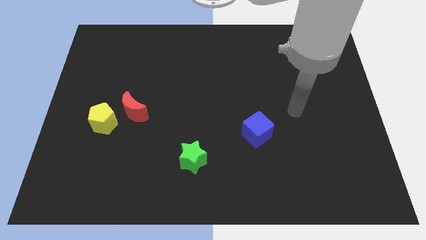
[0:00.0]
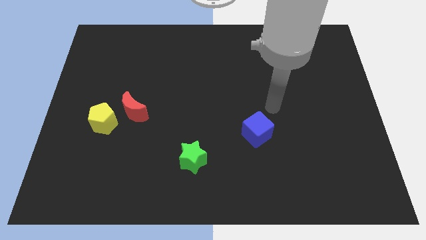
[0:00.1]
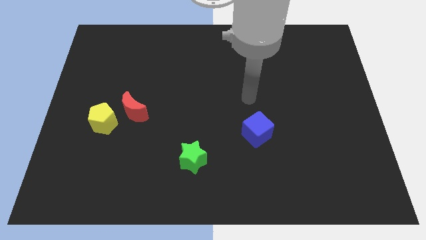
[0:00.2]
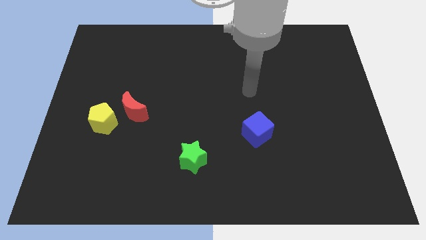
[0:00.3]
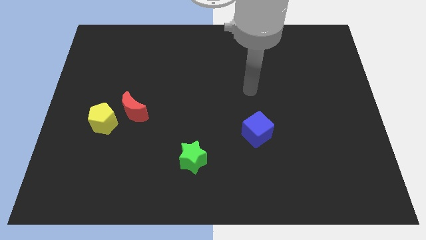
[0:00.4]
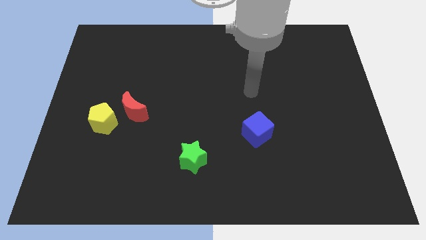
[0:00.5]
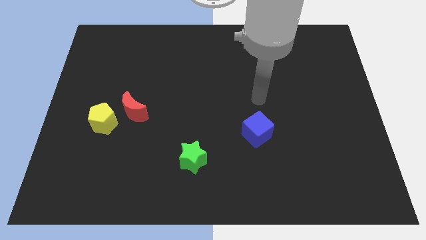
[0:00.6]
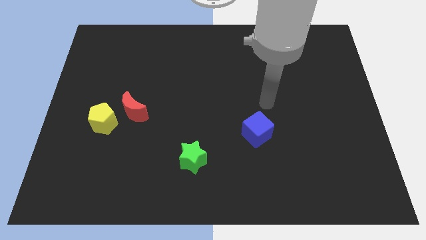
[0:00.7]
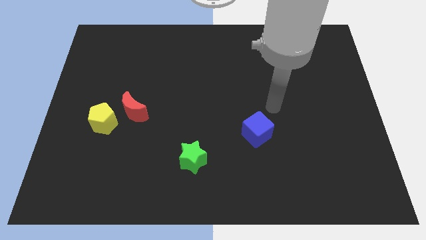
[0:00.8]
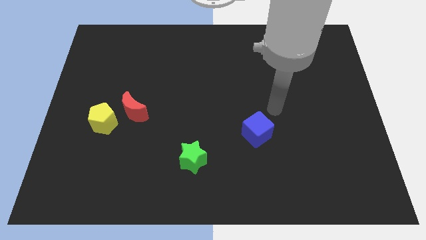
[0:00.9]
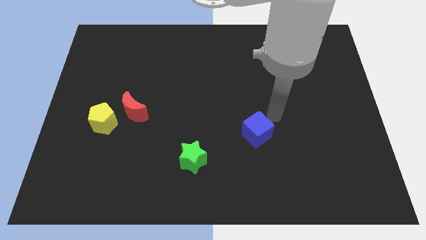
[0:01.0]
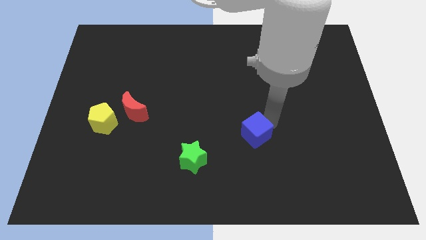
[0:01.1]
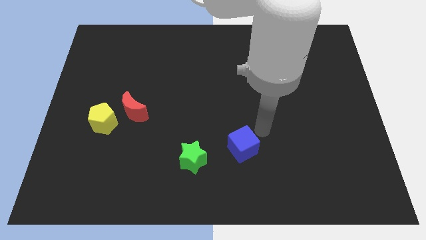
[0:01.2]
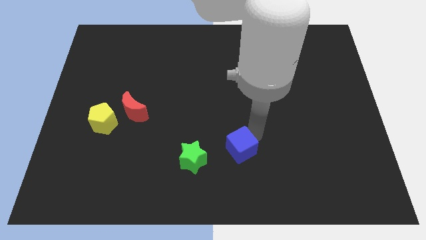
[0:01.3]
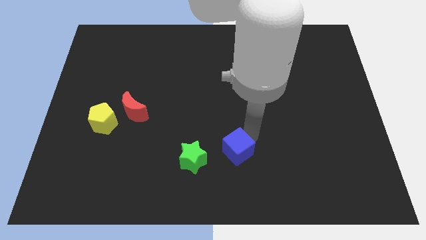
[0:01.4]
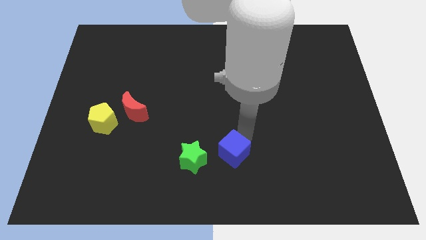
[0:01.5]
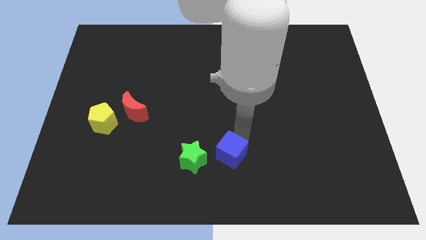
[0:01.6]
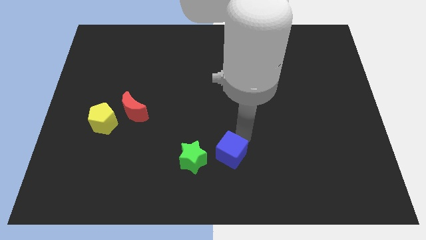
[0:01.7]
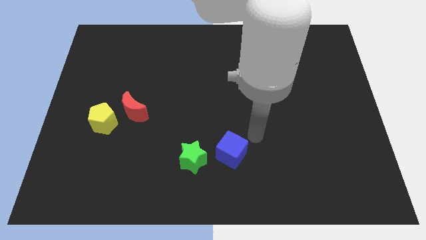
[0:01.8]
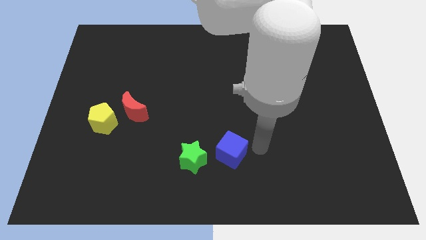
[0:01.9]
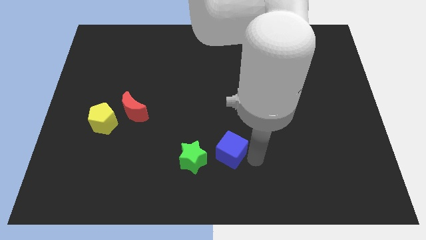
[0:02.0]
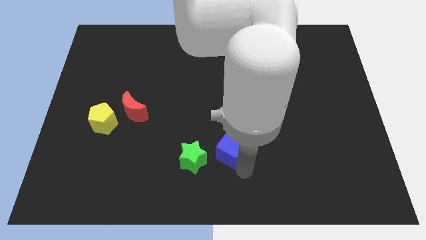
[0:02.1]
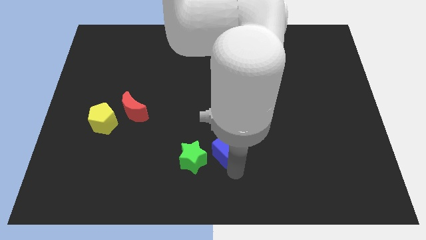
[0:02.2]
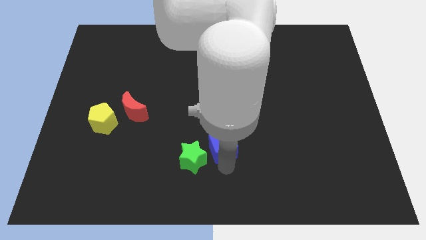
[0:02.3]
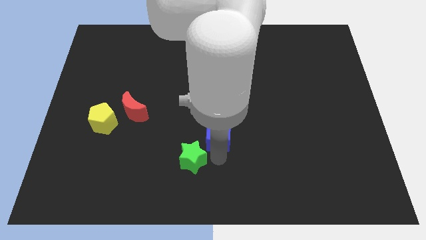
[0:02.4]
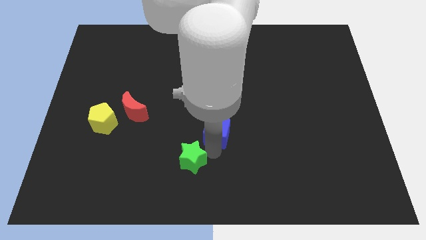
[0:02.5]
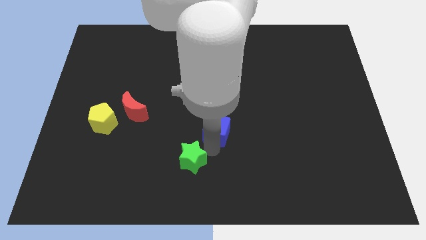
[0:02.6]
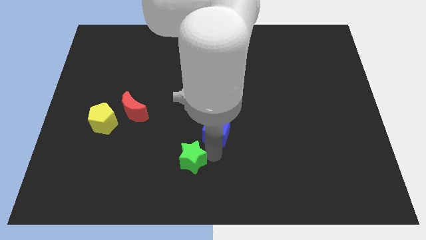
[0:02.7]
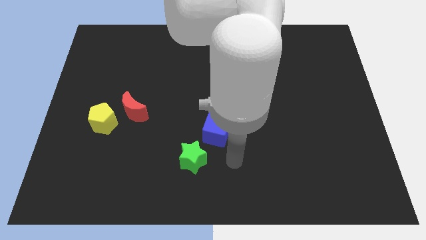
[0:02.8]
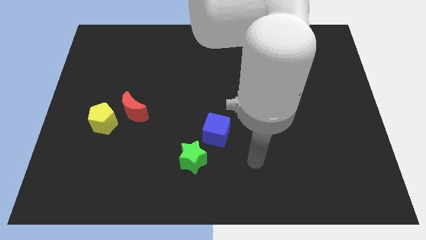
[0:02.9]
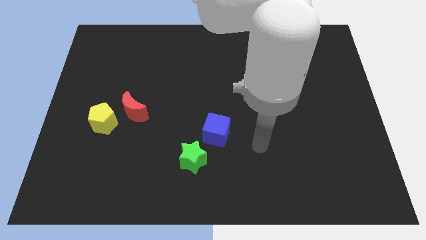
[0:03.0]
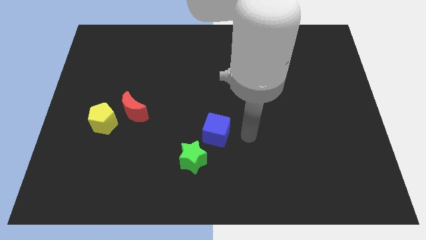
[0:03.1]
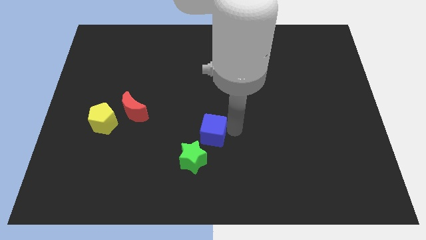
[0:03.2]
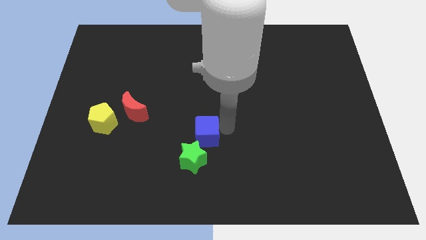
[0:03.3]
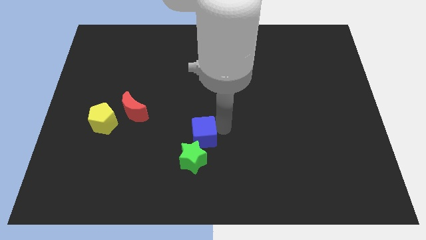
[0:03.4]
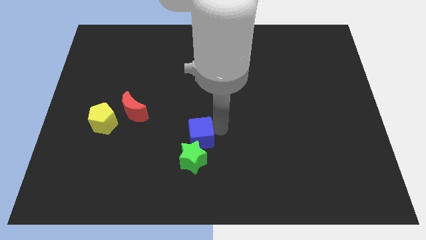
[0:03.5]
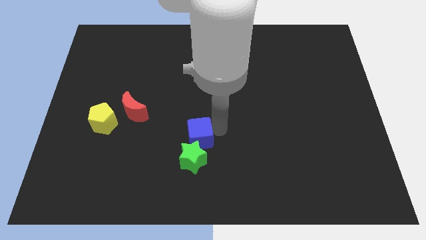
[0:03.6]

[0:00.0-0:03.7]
put the blue cube to the star

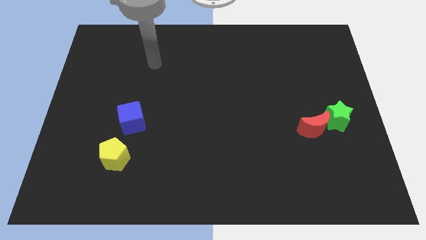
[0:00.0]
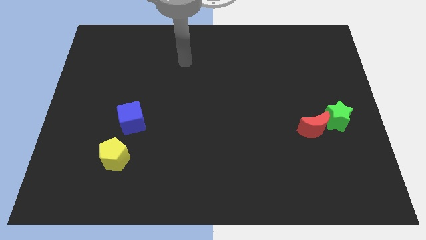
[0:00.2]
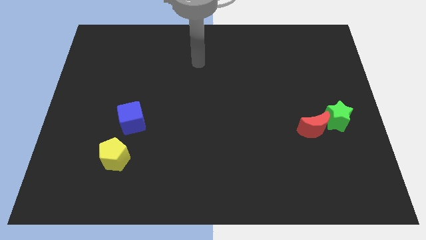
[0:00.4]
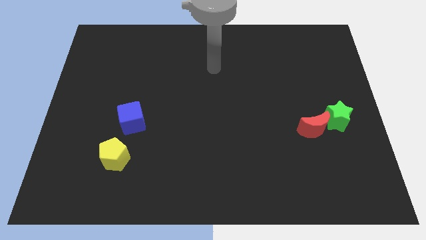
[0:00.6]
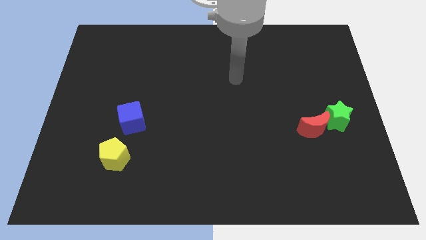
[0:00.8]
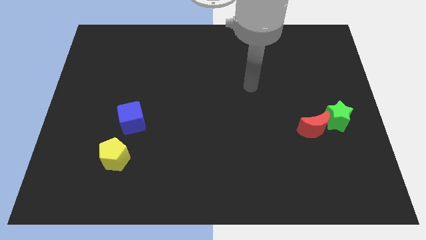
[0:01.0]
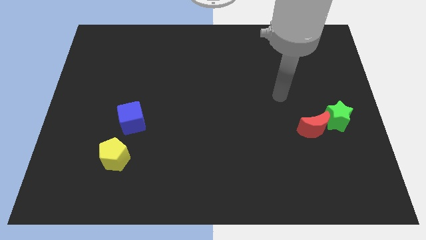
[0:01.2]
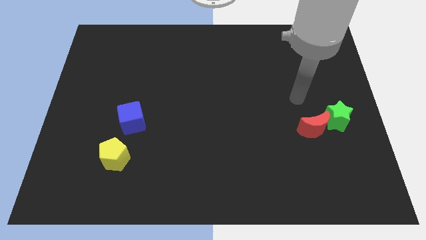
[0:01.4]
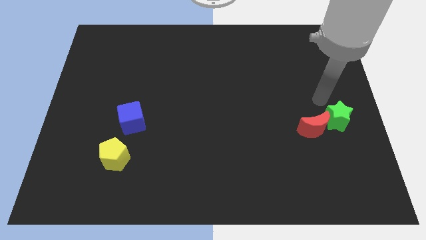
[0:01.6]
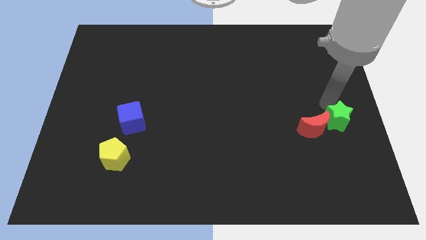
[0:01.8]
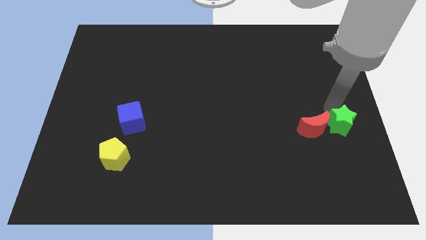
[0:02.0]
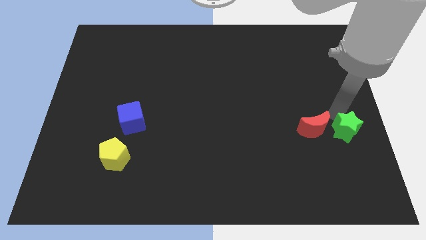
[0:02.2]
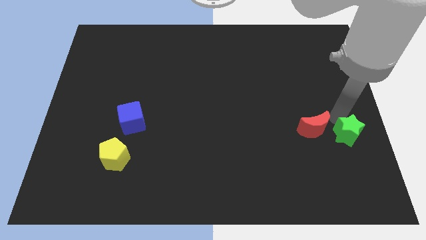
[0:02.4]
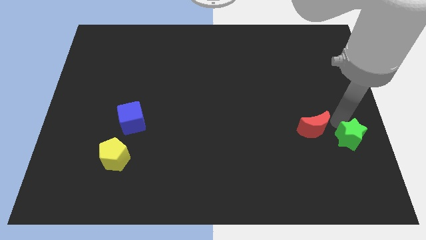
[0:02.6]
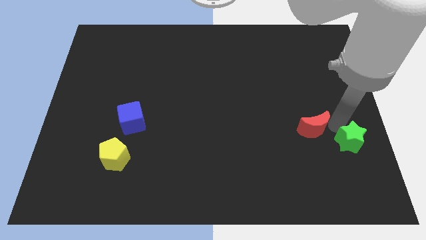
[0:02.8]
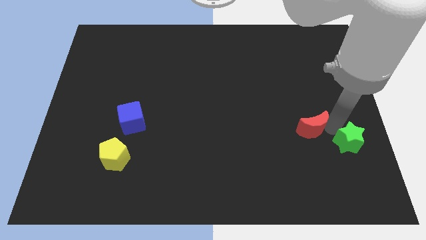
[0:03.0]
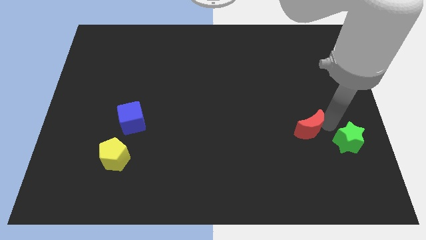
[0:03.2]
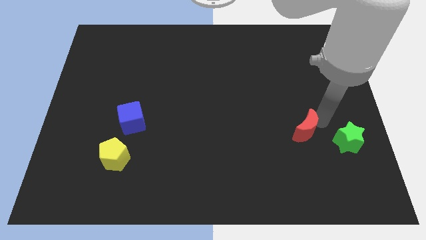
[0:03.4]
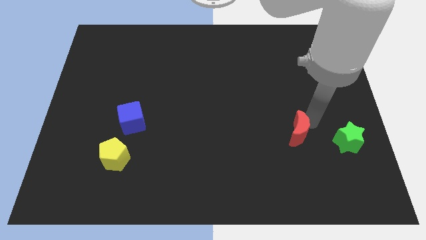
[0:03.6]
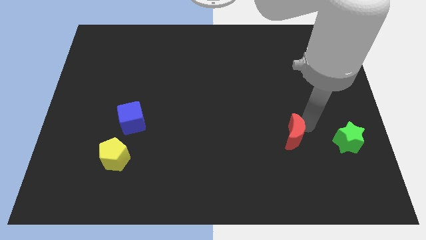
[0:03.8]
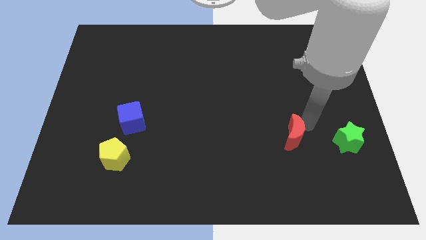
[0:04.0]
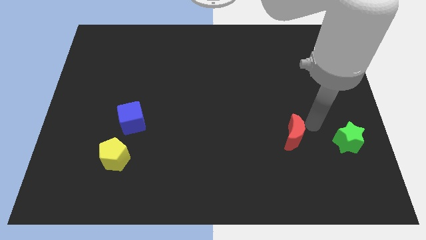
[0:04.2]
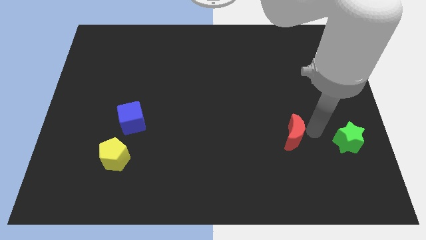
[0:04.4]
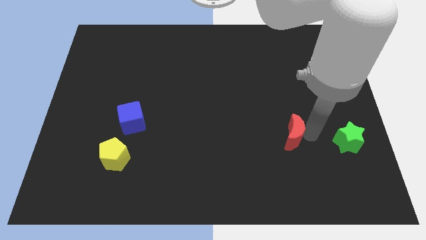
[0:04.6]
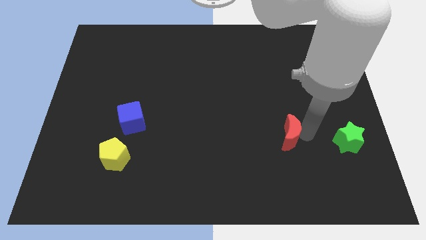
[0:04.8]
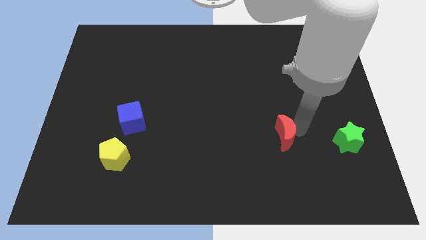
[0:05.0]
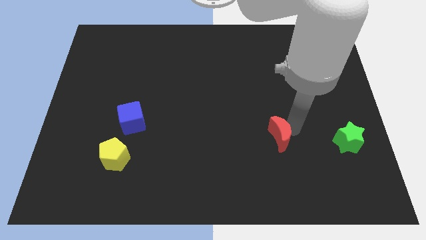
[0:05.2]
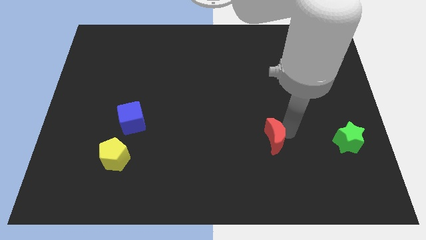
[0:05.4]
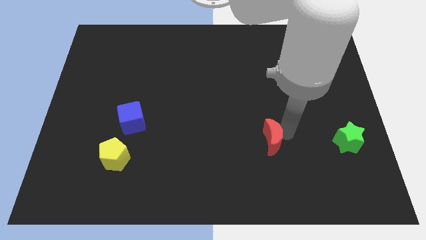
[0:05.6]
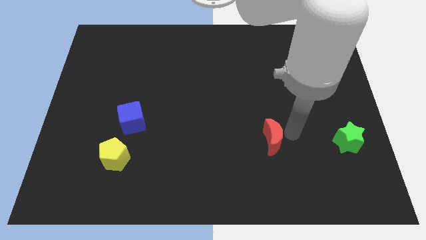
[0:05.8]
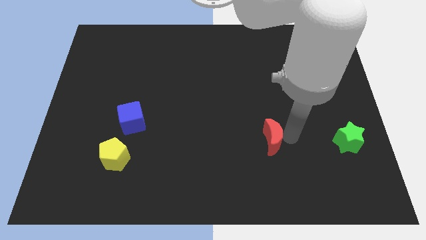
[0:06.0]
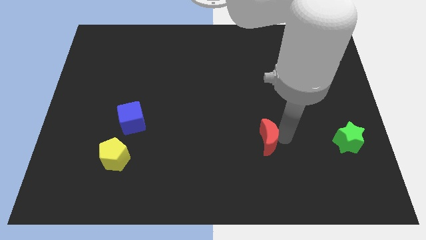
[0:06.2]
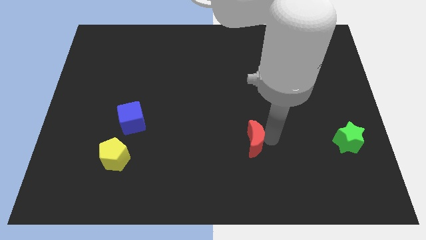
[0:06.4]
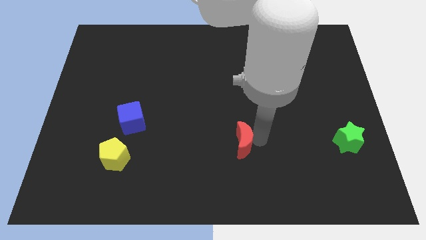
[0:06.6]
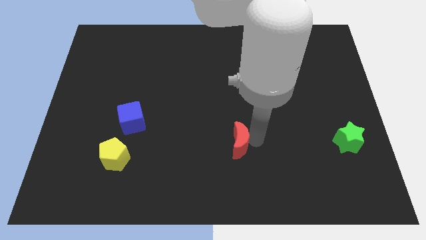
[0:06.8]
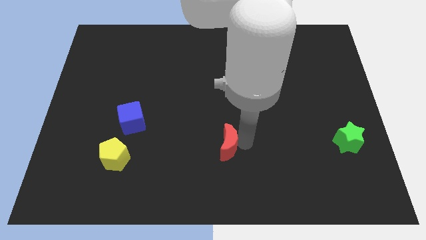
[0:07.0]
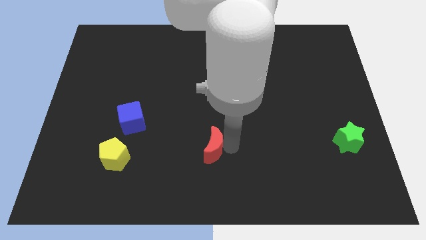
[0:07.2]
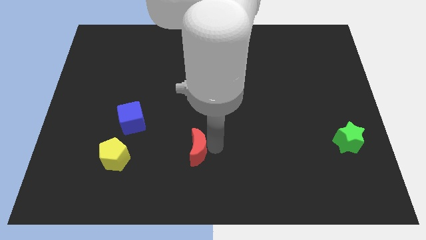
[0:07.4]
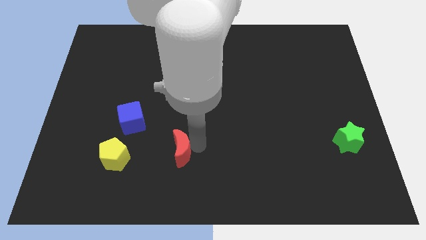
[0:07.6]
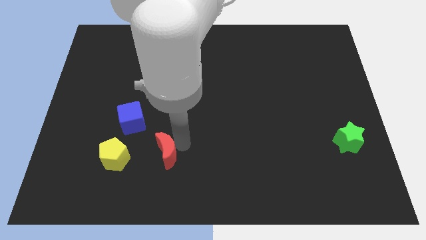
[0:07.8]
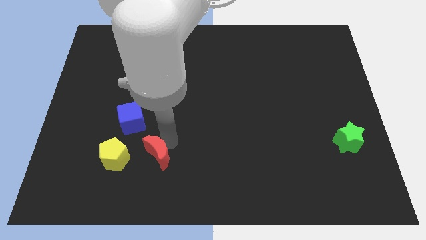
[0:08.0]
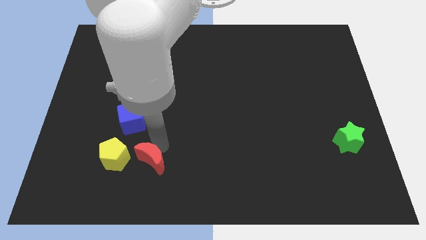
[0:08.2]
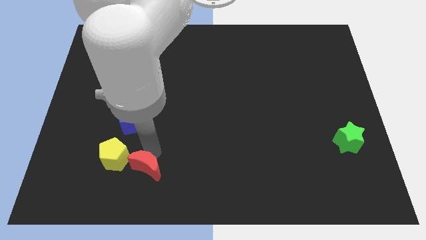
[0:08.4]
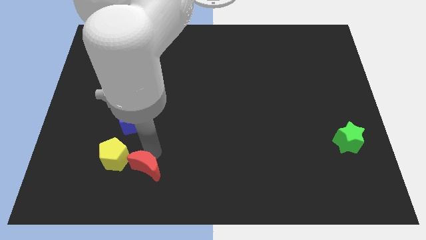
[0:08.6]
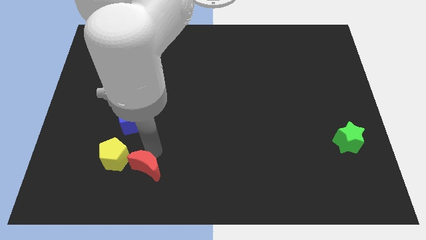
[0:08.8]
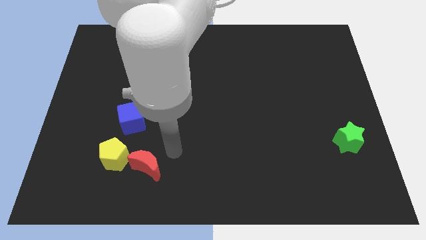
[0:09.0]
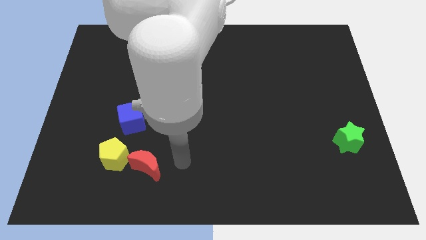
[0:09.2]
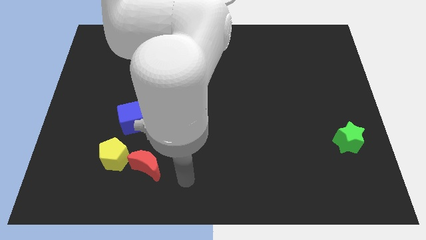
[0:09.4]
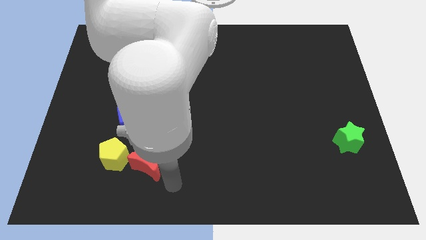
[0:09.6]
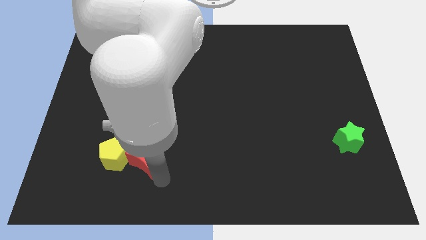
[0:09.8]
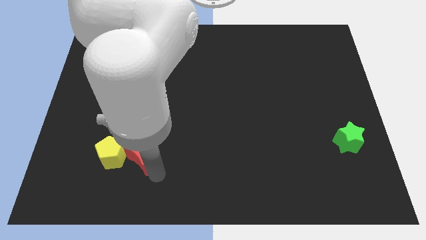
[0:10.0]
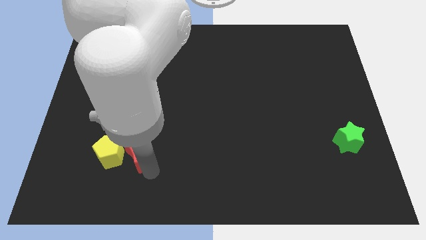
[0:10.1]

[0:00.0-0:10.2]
put the moon close to the pentagon
